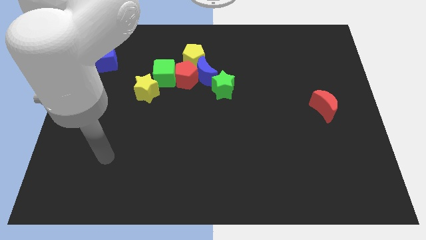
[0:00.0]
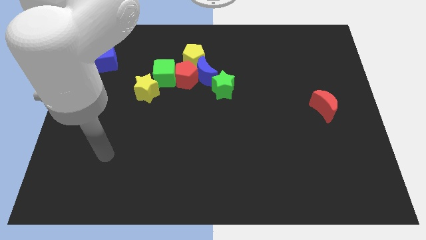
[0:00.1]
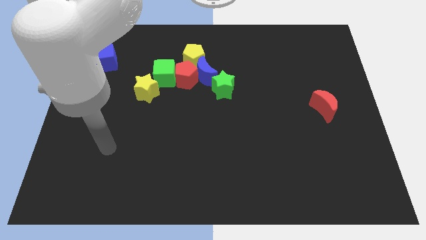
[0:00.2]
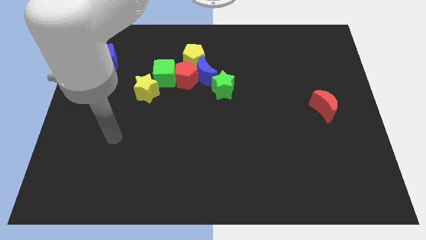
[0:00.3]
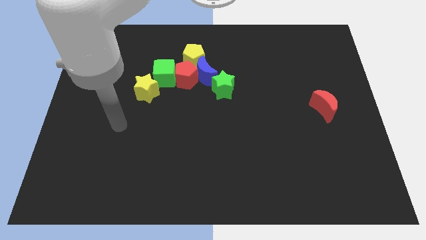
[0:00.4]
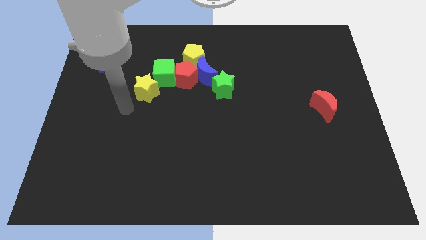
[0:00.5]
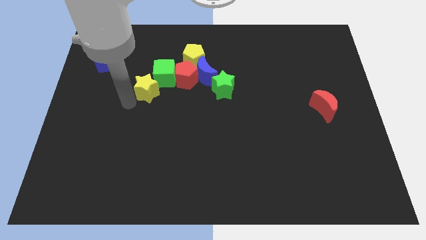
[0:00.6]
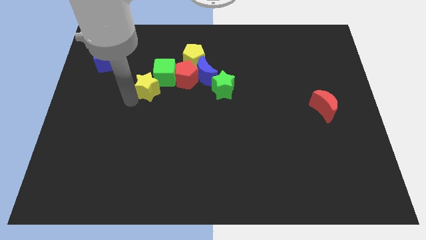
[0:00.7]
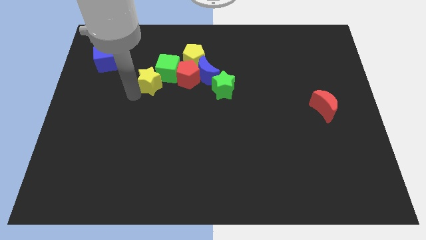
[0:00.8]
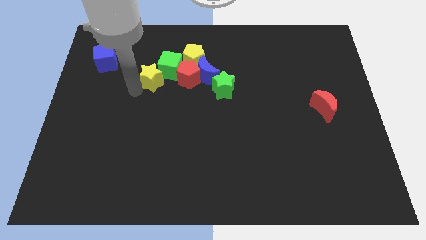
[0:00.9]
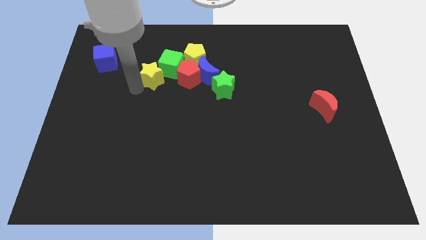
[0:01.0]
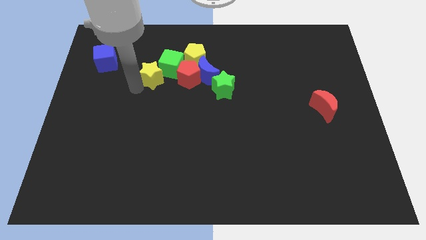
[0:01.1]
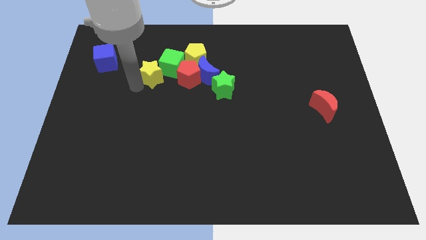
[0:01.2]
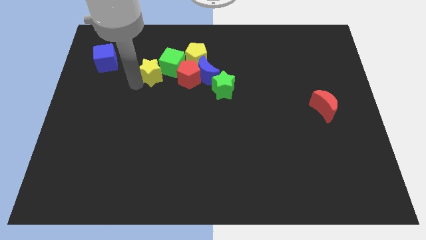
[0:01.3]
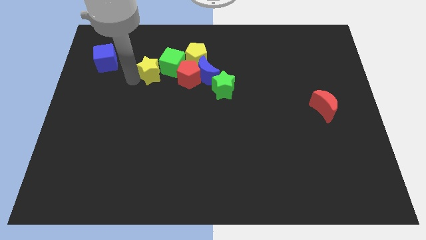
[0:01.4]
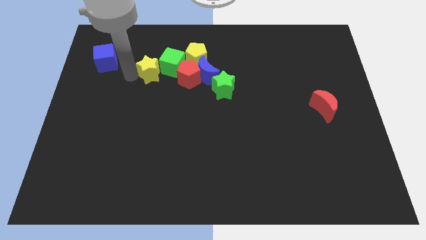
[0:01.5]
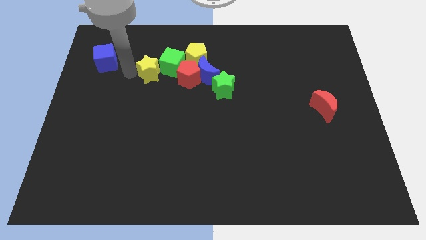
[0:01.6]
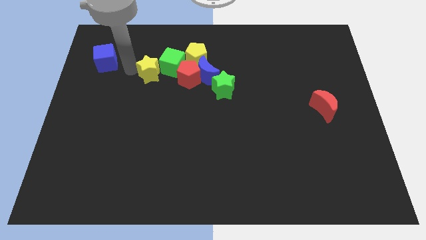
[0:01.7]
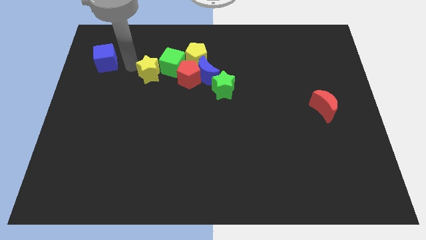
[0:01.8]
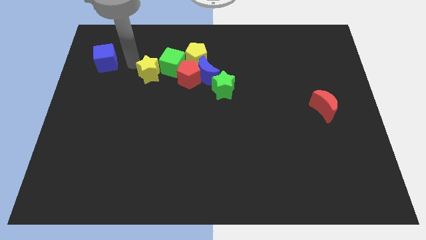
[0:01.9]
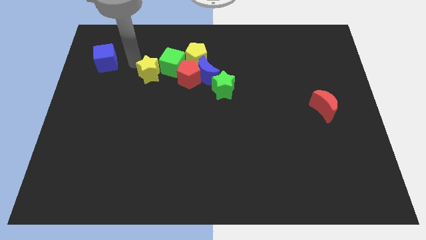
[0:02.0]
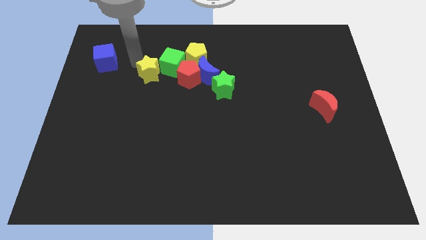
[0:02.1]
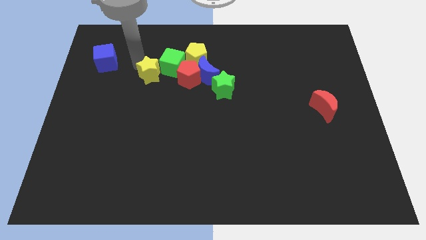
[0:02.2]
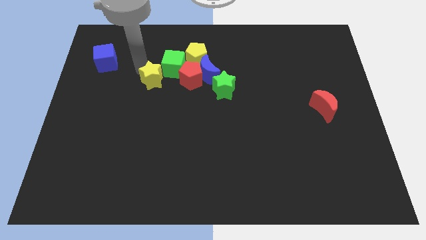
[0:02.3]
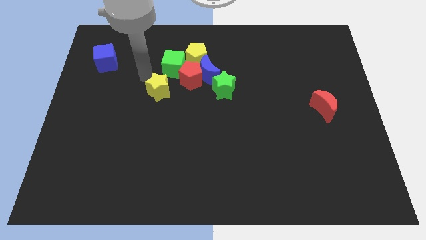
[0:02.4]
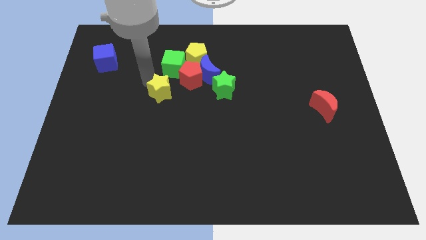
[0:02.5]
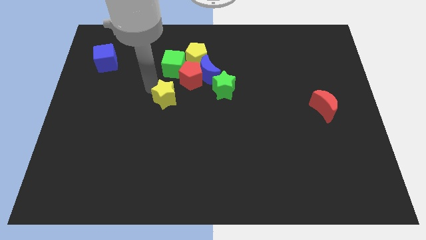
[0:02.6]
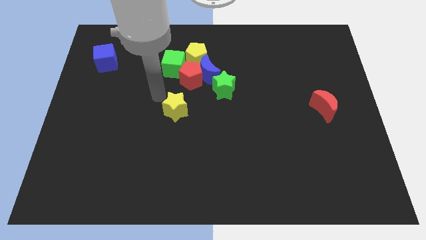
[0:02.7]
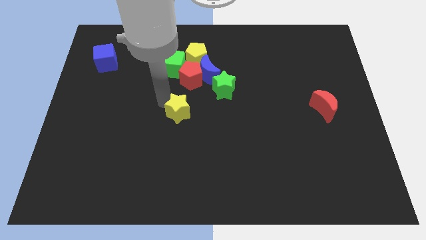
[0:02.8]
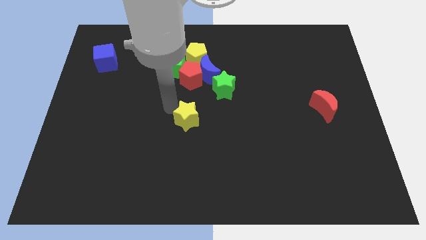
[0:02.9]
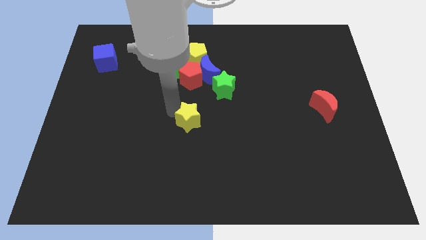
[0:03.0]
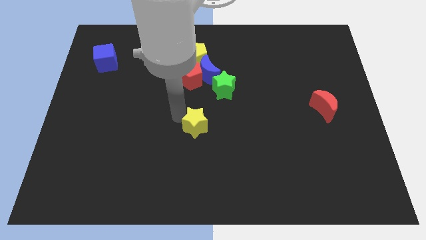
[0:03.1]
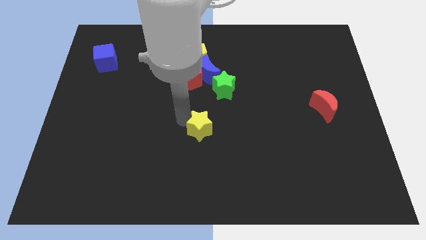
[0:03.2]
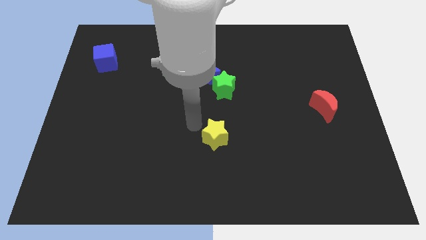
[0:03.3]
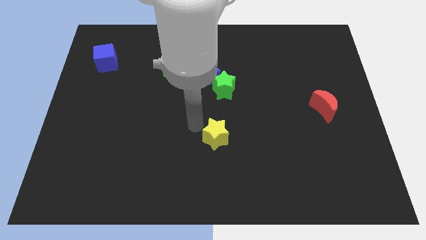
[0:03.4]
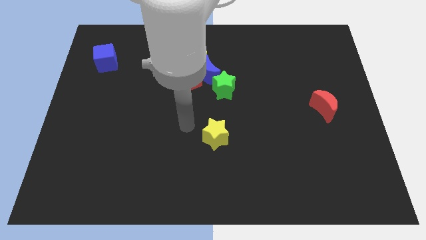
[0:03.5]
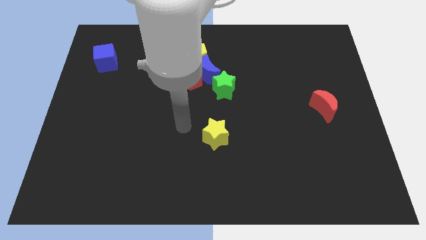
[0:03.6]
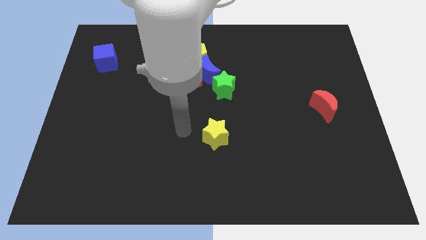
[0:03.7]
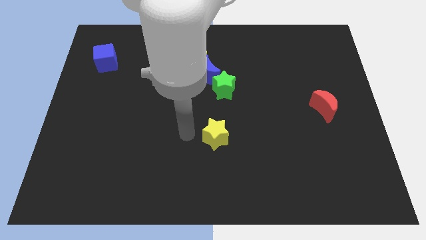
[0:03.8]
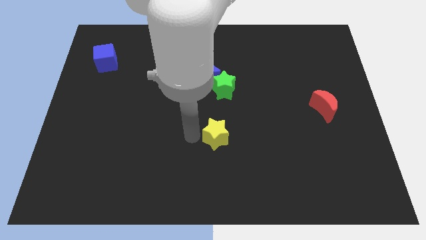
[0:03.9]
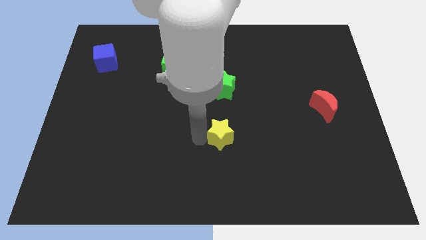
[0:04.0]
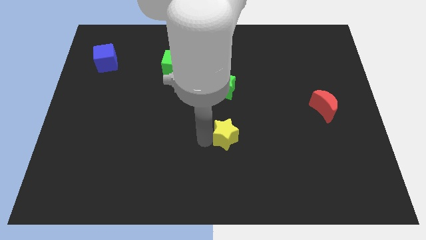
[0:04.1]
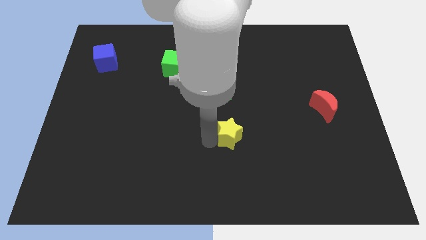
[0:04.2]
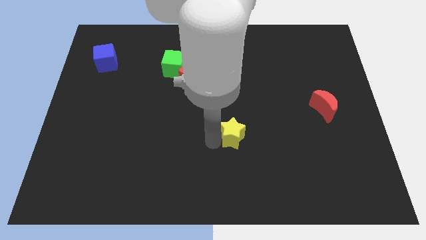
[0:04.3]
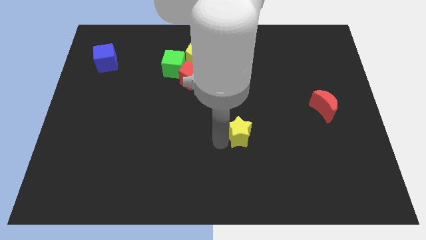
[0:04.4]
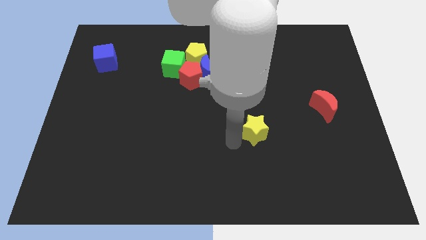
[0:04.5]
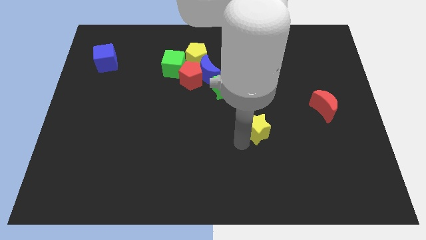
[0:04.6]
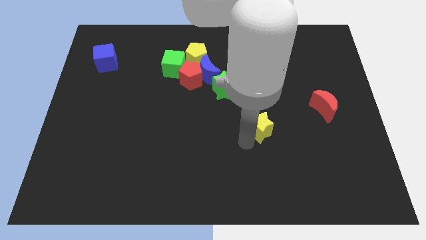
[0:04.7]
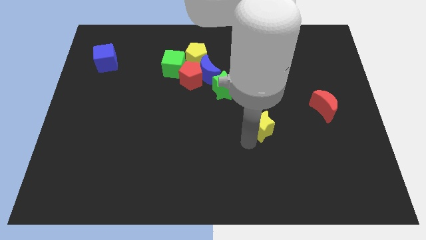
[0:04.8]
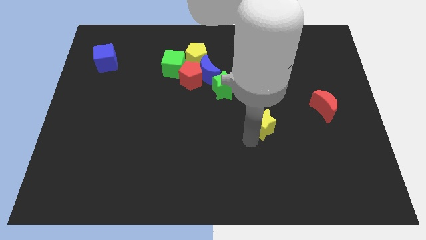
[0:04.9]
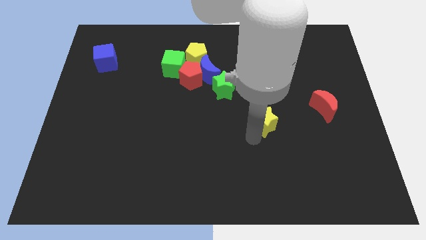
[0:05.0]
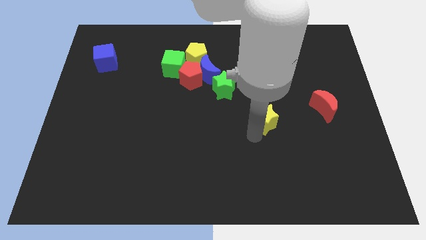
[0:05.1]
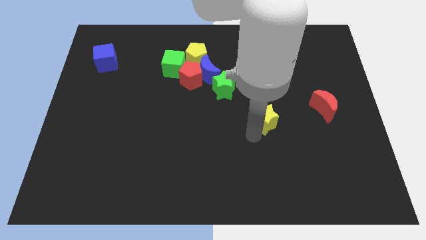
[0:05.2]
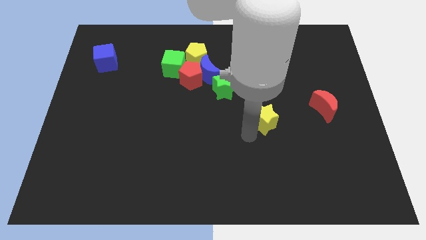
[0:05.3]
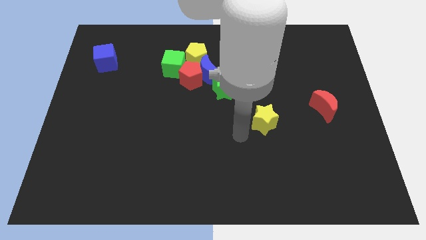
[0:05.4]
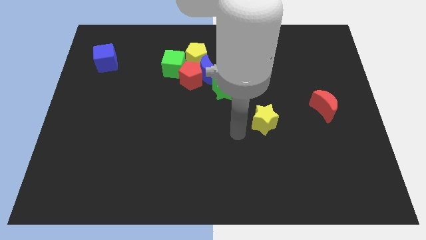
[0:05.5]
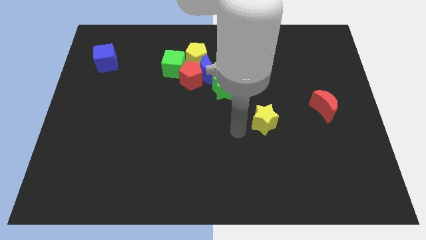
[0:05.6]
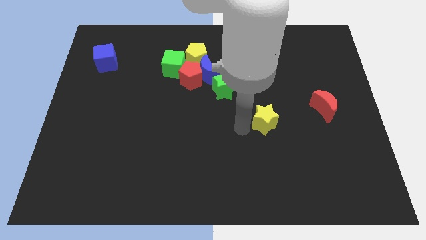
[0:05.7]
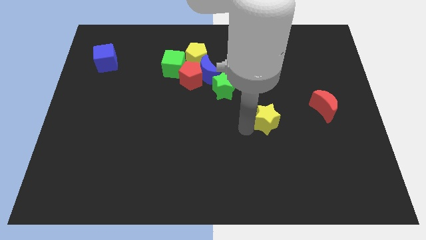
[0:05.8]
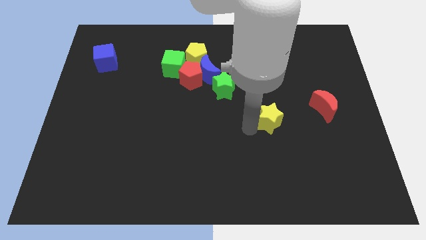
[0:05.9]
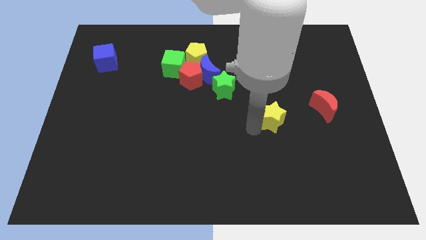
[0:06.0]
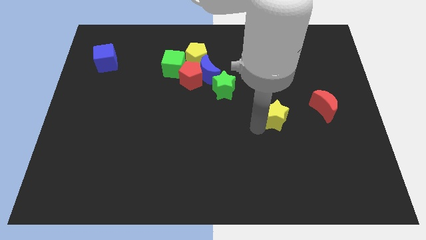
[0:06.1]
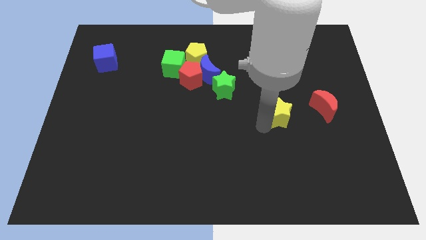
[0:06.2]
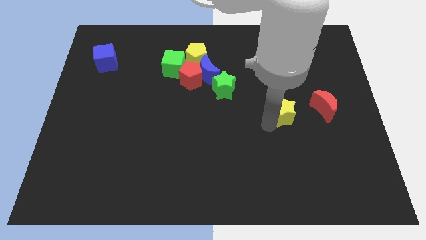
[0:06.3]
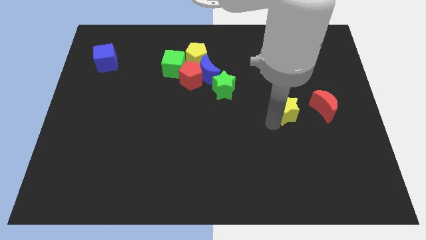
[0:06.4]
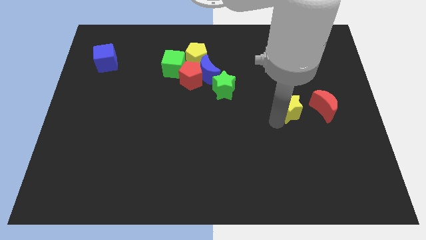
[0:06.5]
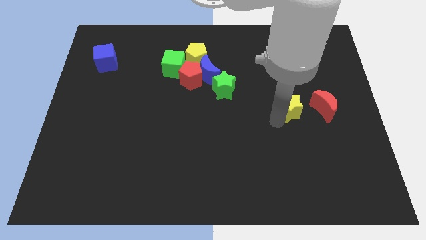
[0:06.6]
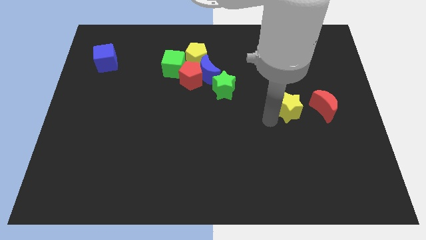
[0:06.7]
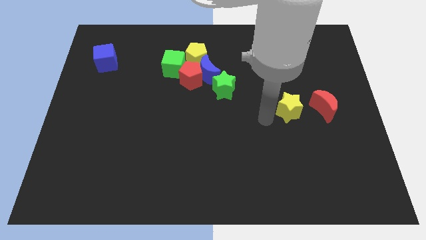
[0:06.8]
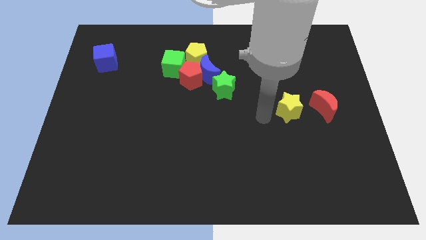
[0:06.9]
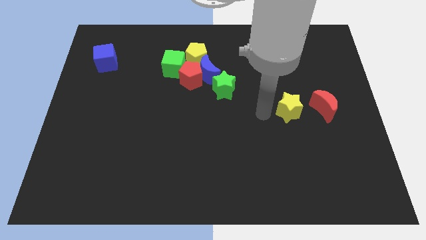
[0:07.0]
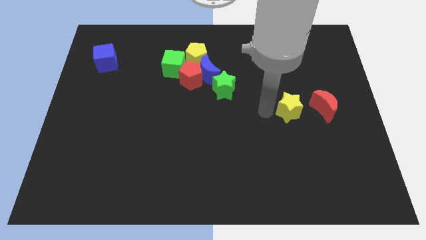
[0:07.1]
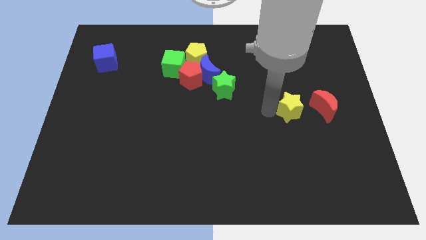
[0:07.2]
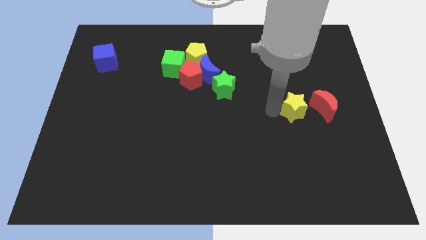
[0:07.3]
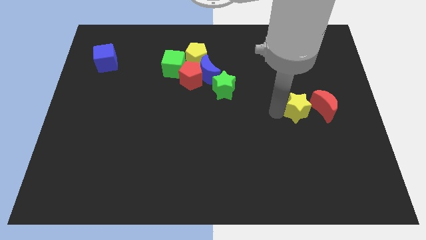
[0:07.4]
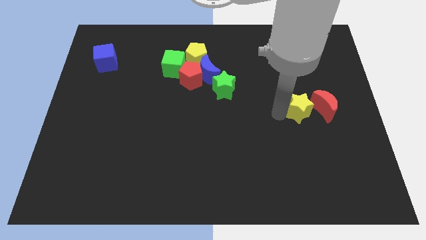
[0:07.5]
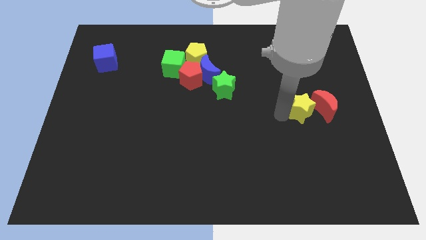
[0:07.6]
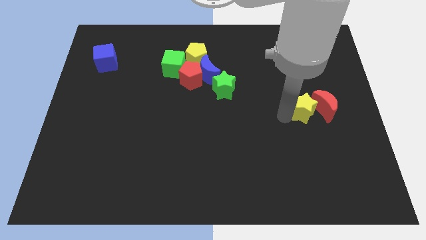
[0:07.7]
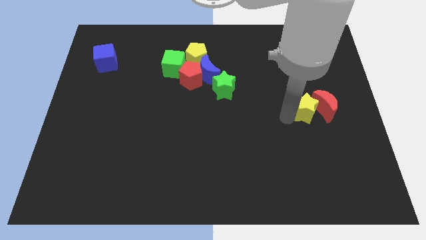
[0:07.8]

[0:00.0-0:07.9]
push the yellow star close to the red moon
